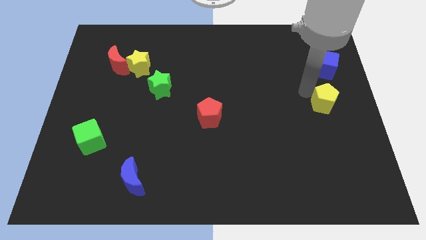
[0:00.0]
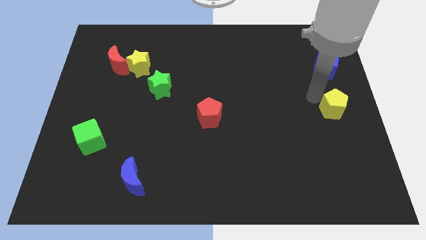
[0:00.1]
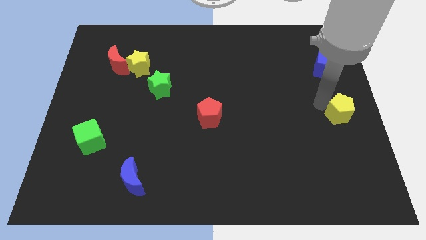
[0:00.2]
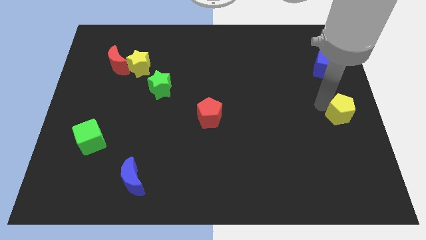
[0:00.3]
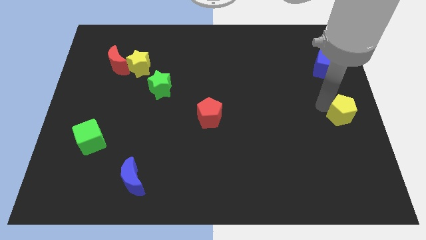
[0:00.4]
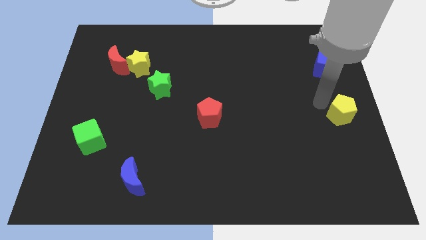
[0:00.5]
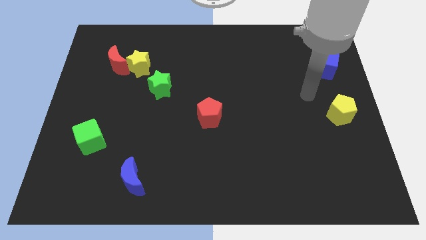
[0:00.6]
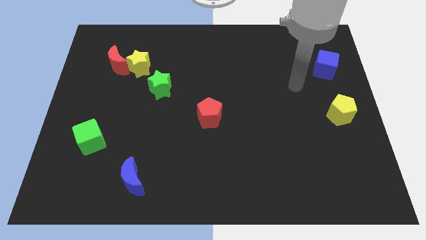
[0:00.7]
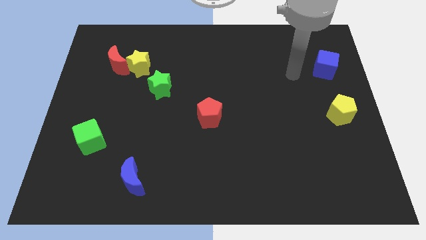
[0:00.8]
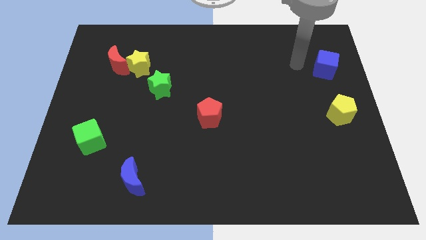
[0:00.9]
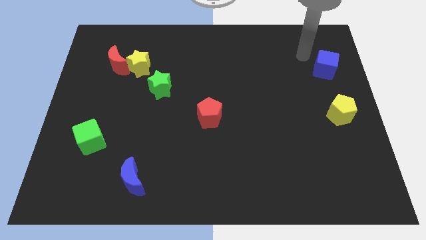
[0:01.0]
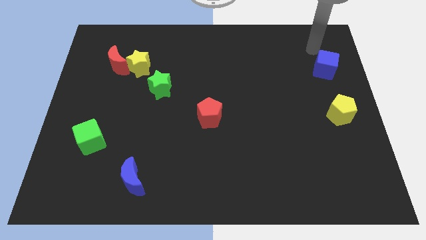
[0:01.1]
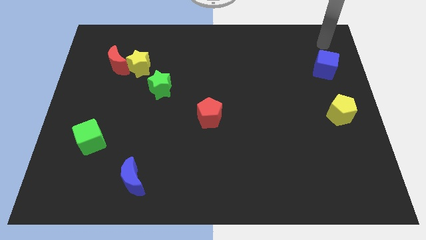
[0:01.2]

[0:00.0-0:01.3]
place the yellow pentagon to the right of the red pentagon

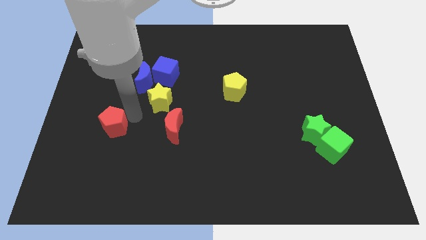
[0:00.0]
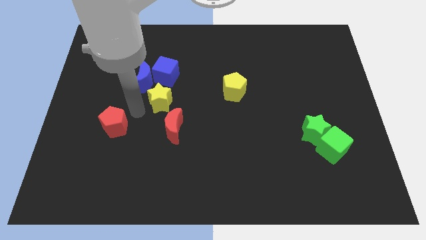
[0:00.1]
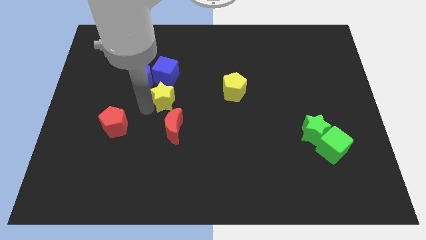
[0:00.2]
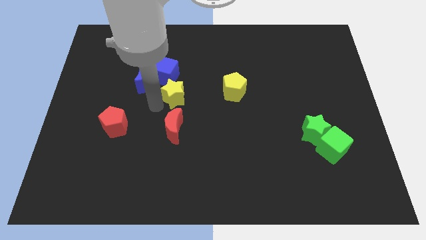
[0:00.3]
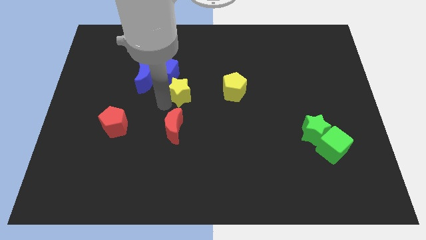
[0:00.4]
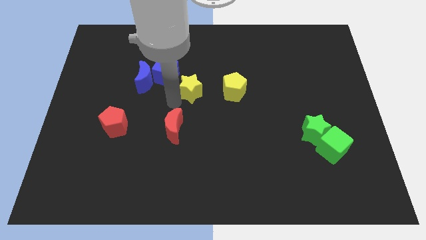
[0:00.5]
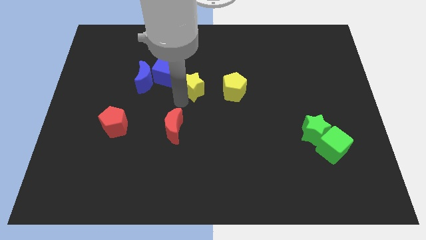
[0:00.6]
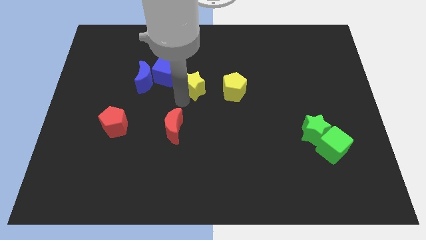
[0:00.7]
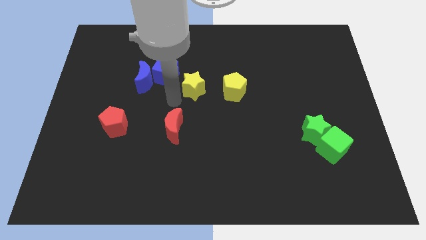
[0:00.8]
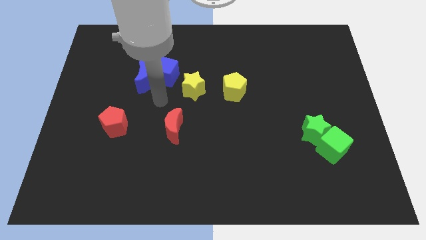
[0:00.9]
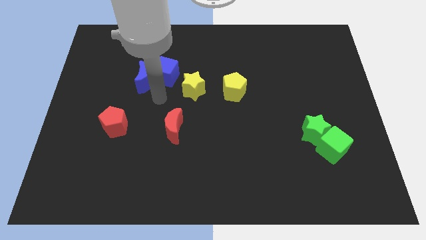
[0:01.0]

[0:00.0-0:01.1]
put the yellow star to the left side of the yellow pentagon

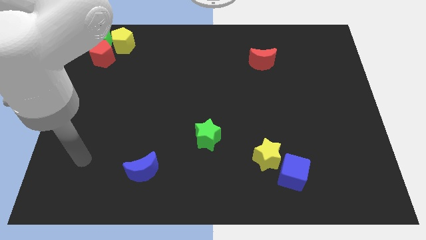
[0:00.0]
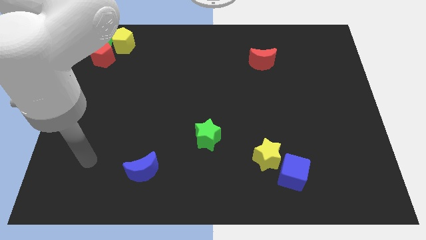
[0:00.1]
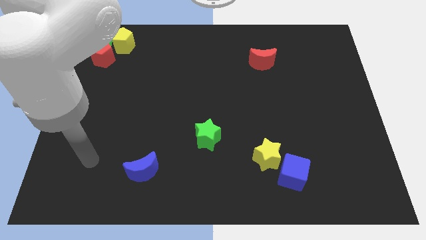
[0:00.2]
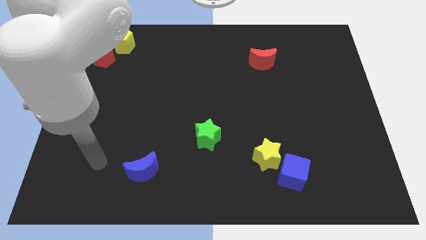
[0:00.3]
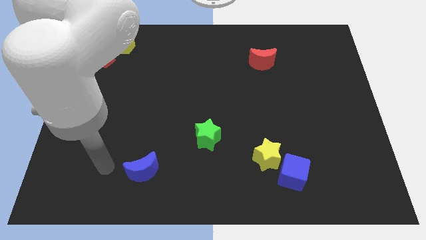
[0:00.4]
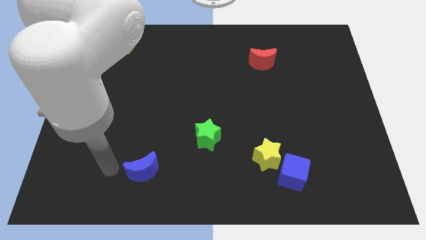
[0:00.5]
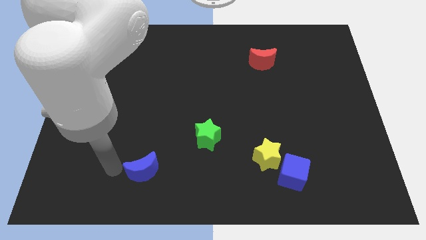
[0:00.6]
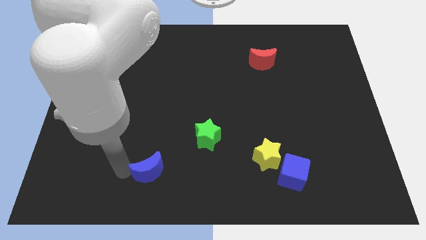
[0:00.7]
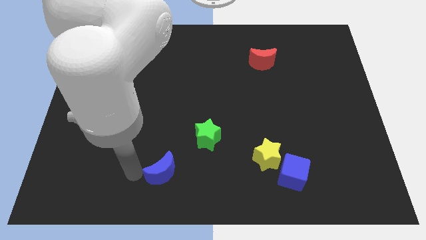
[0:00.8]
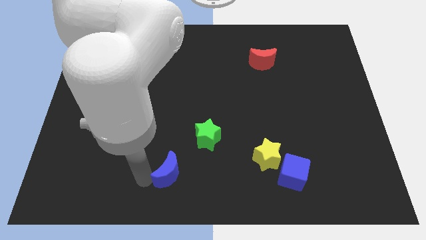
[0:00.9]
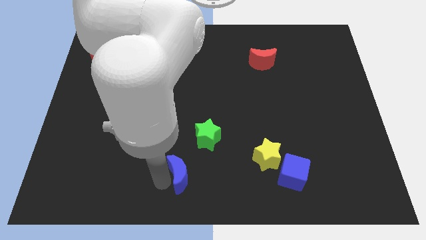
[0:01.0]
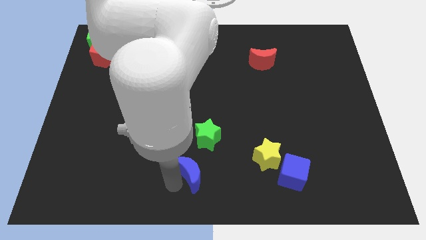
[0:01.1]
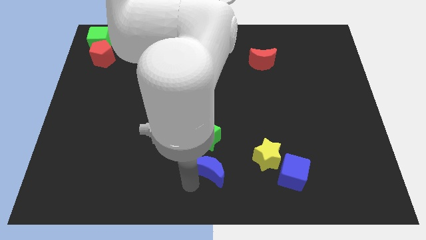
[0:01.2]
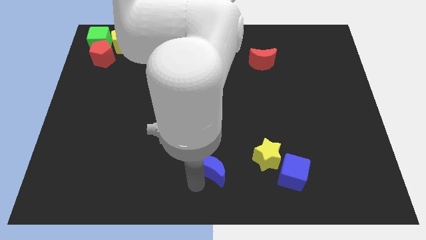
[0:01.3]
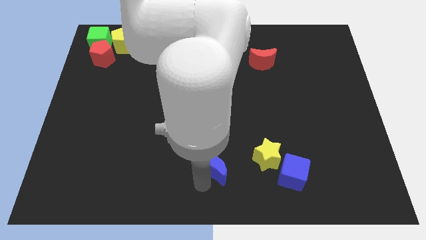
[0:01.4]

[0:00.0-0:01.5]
place the blue crescent below the green star

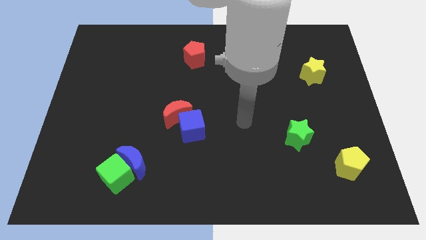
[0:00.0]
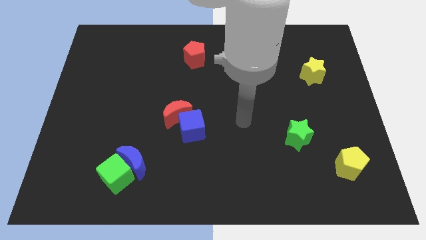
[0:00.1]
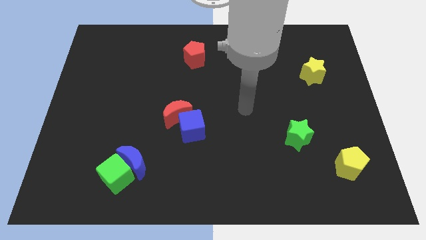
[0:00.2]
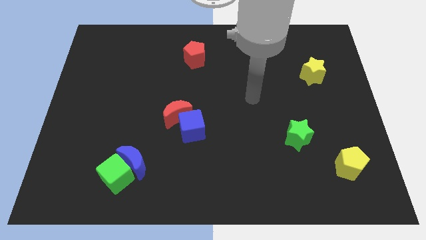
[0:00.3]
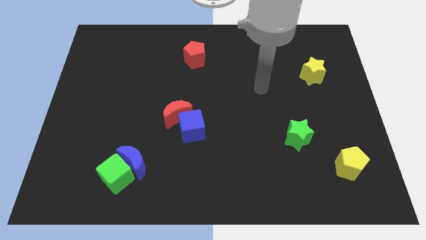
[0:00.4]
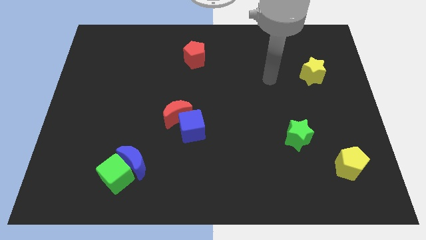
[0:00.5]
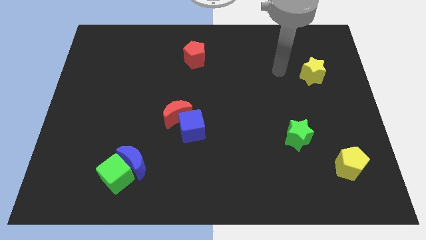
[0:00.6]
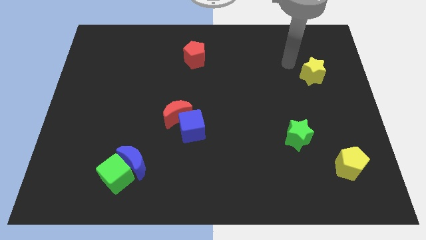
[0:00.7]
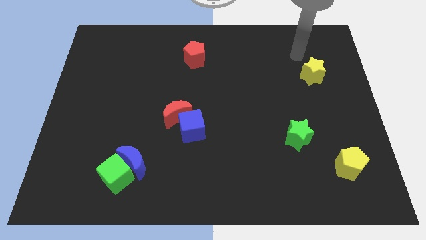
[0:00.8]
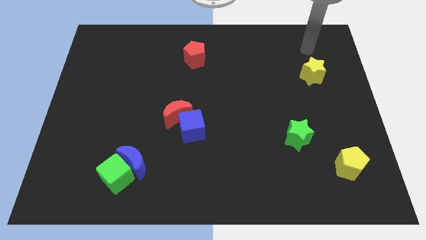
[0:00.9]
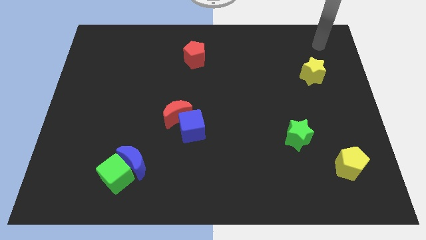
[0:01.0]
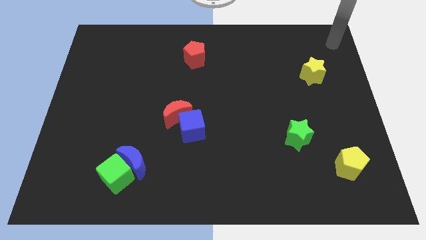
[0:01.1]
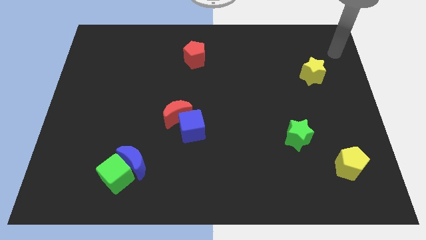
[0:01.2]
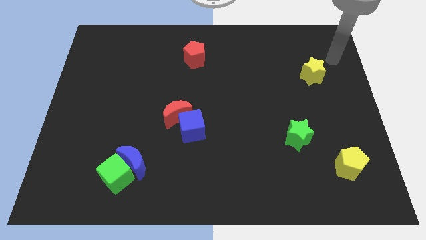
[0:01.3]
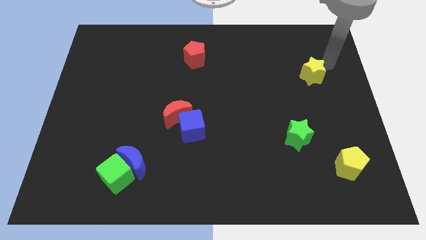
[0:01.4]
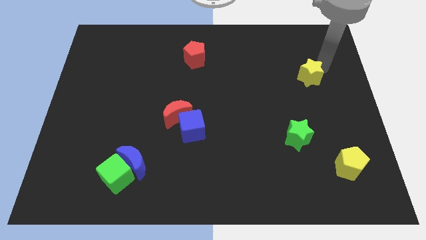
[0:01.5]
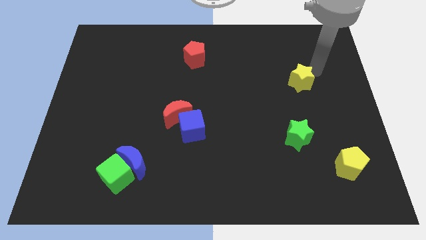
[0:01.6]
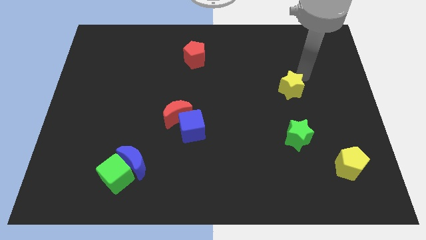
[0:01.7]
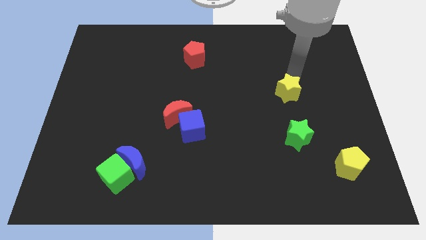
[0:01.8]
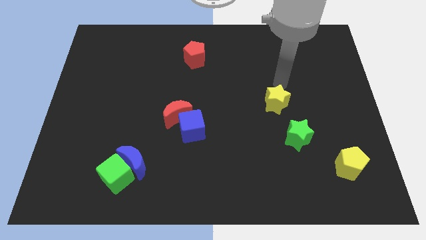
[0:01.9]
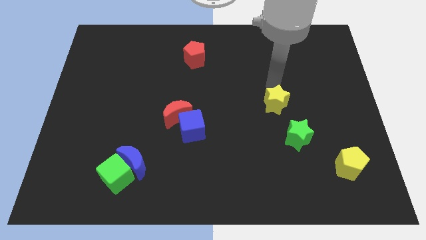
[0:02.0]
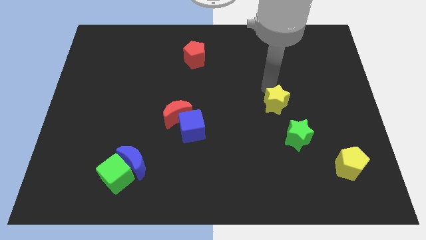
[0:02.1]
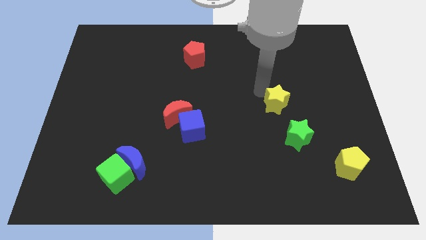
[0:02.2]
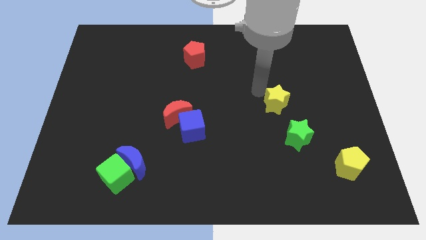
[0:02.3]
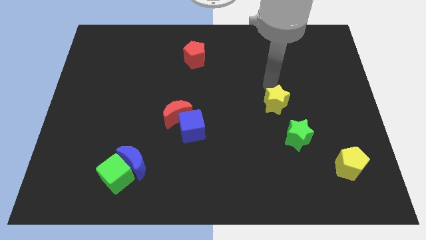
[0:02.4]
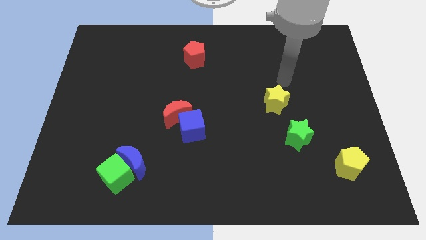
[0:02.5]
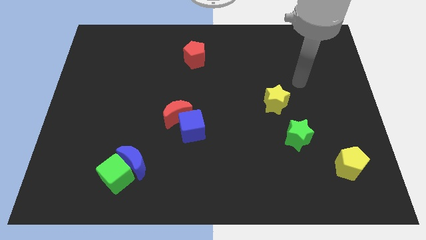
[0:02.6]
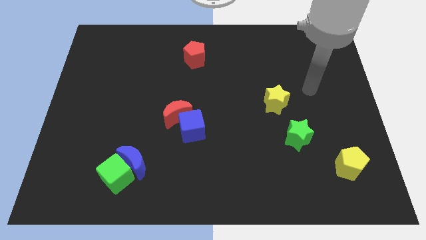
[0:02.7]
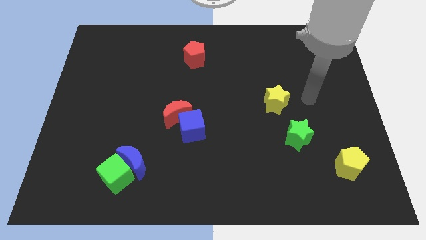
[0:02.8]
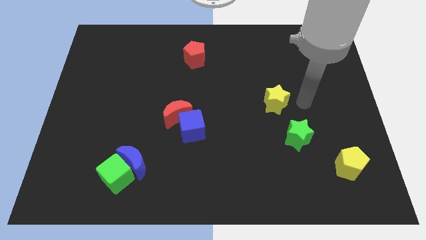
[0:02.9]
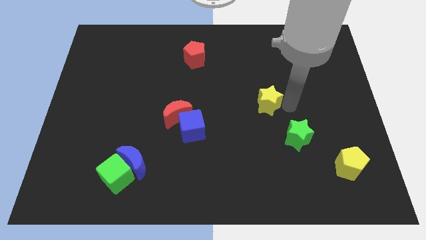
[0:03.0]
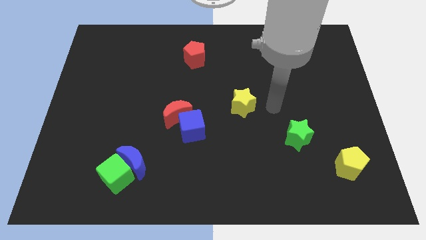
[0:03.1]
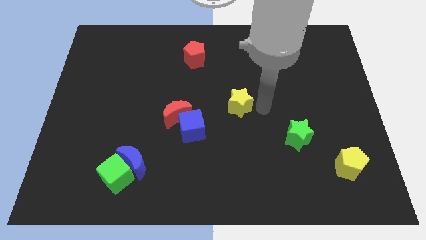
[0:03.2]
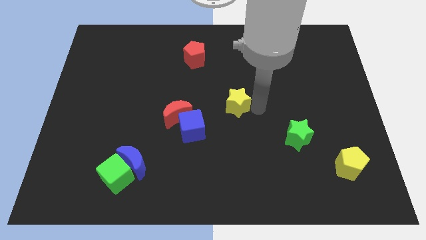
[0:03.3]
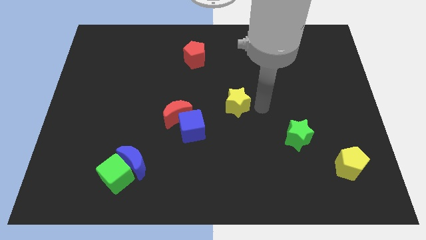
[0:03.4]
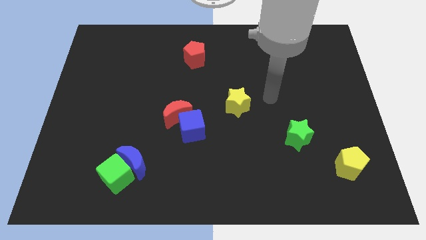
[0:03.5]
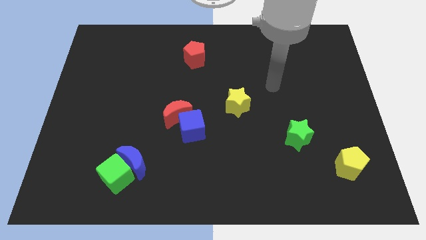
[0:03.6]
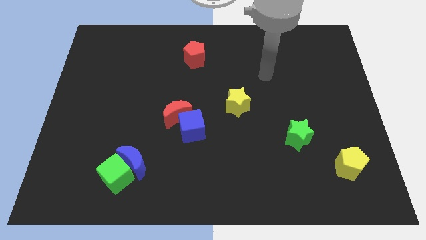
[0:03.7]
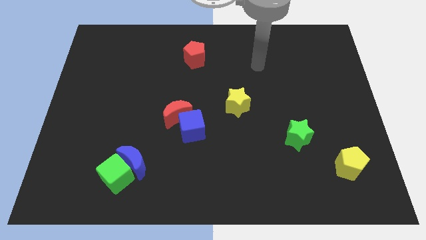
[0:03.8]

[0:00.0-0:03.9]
put the yellow star diagonally above the top left side of the green star

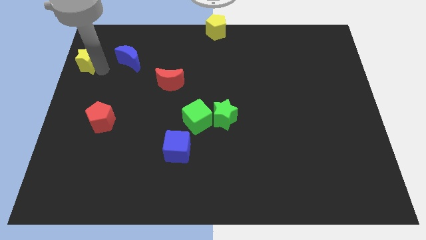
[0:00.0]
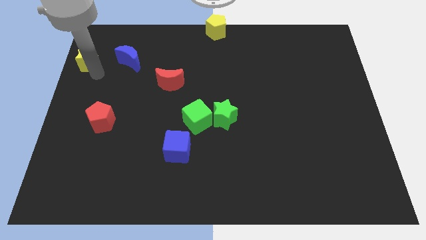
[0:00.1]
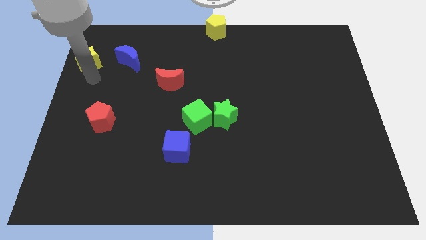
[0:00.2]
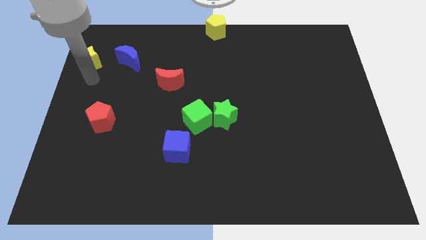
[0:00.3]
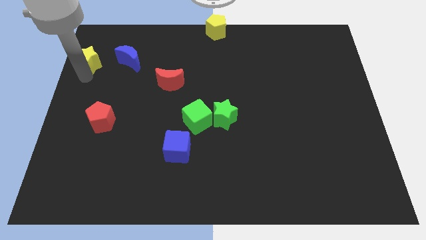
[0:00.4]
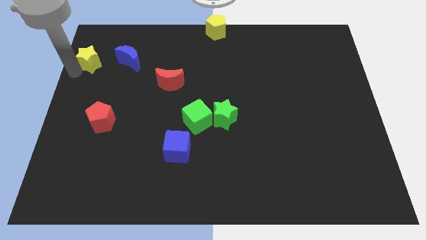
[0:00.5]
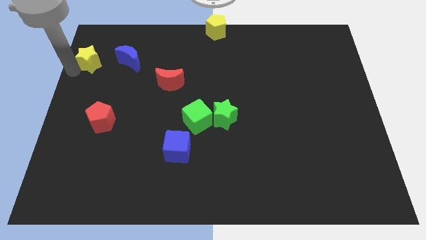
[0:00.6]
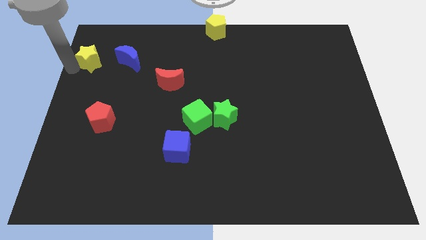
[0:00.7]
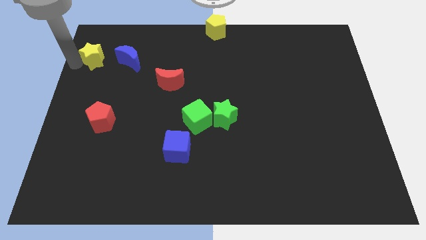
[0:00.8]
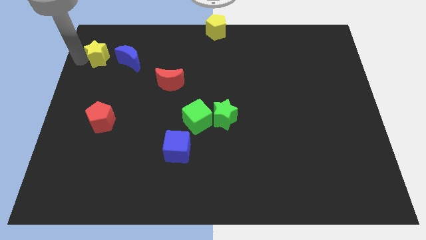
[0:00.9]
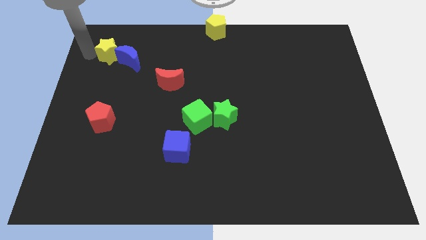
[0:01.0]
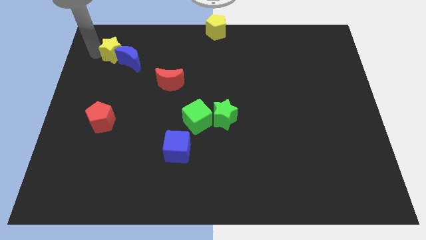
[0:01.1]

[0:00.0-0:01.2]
slide yellow star into blue moon
